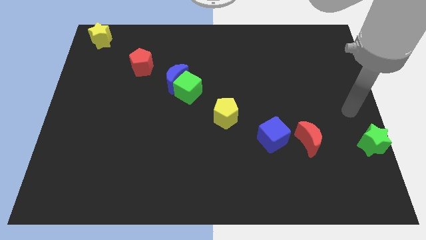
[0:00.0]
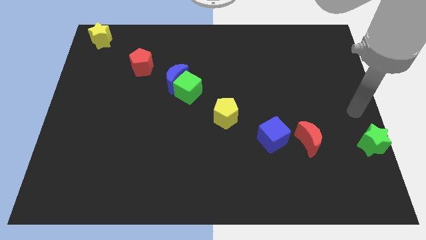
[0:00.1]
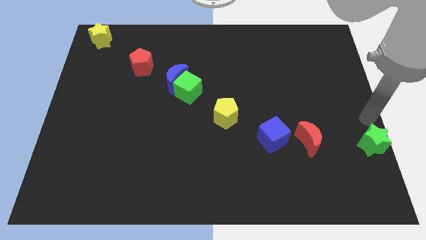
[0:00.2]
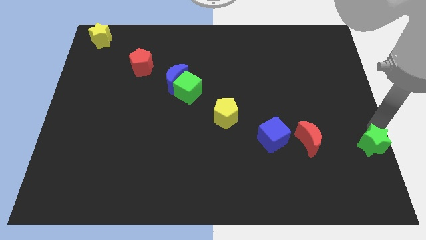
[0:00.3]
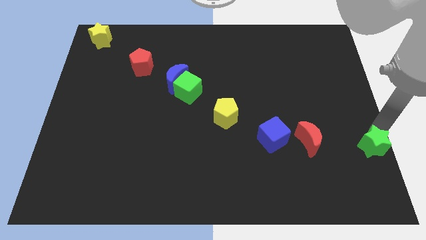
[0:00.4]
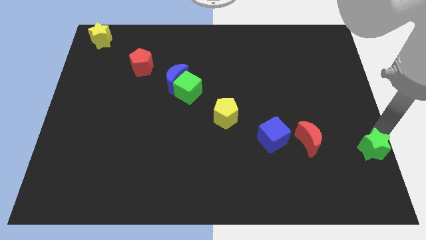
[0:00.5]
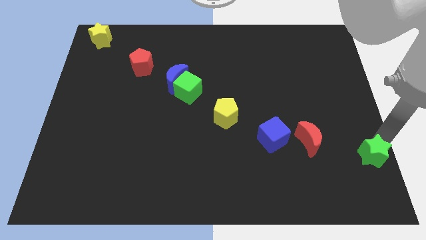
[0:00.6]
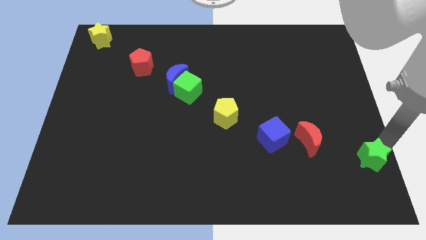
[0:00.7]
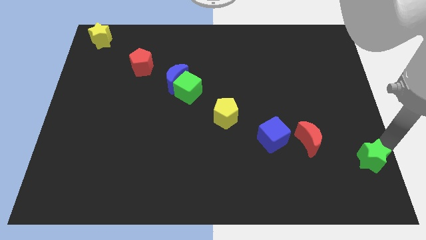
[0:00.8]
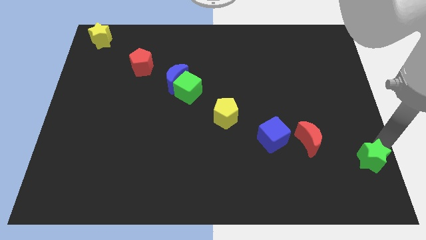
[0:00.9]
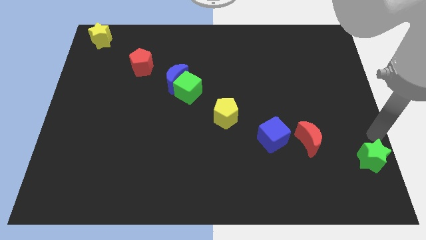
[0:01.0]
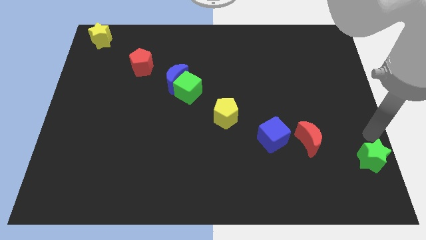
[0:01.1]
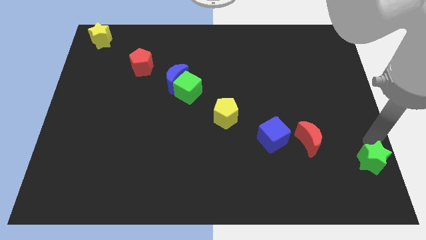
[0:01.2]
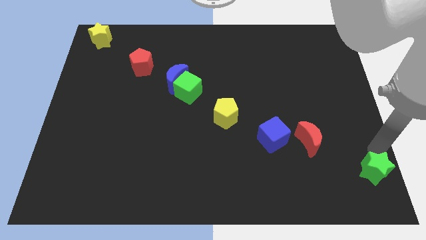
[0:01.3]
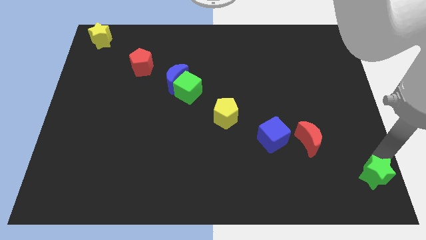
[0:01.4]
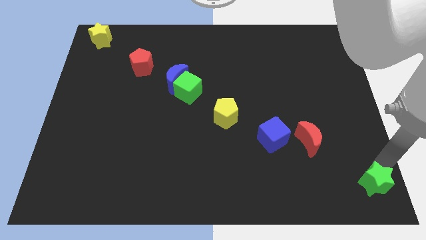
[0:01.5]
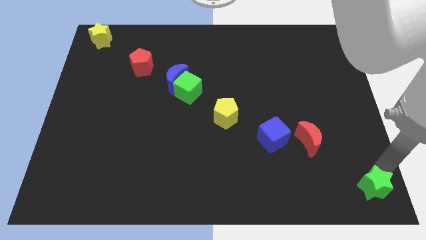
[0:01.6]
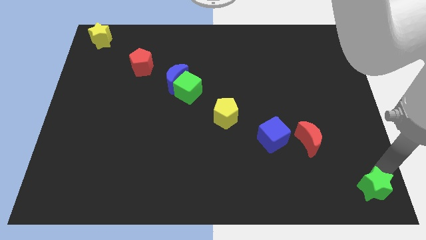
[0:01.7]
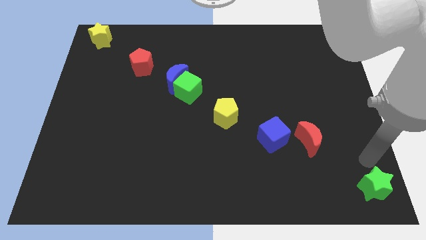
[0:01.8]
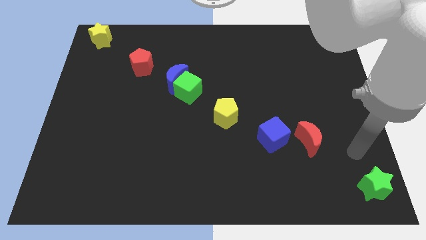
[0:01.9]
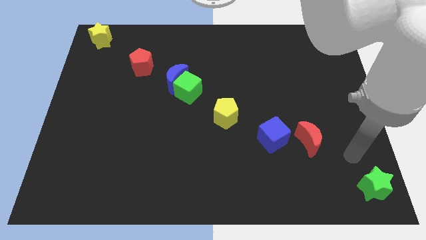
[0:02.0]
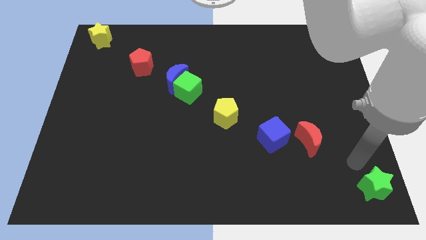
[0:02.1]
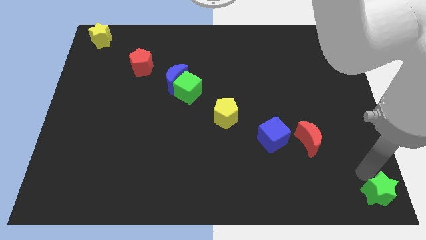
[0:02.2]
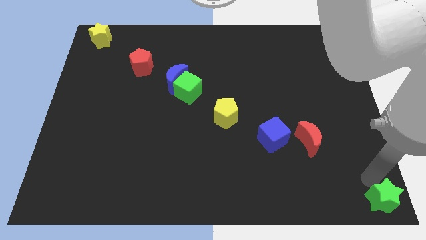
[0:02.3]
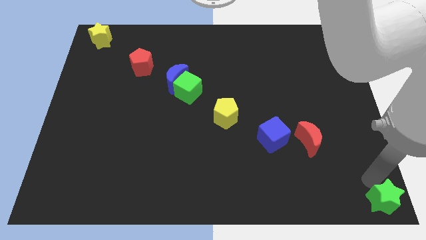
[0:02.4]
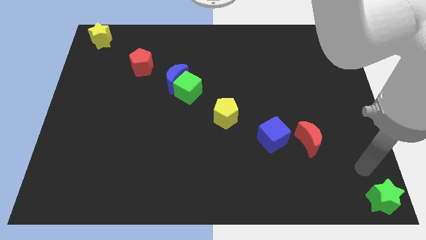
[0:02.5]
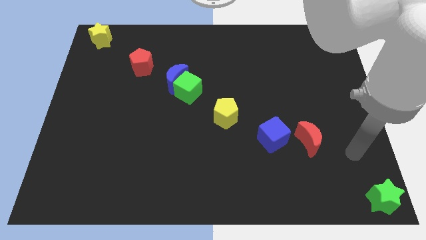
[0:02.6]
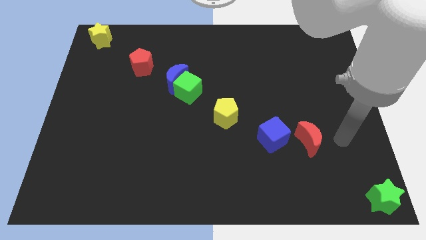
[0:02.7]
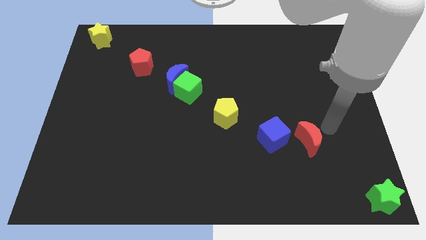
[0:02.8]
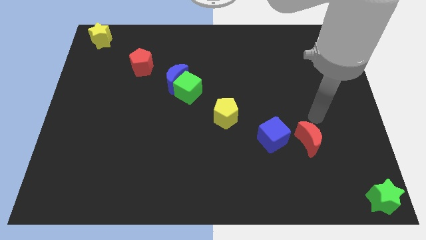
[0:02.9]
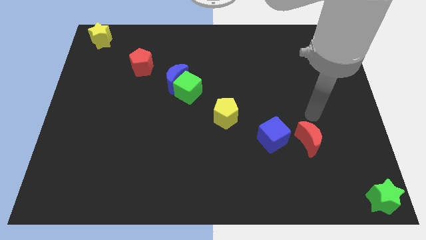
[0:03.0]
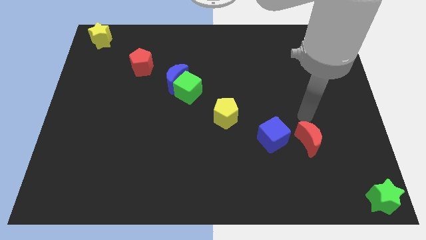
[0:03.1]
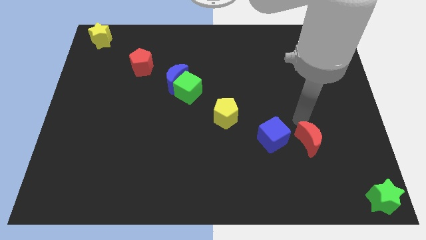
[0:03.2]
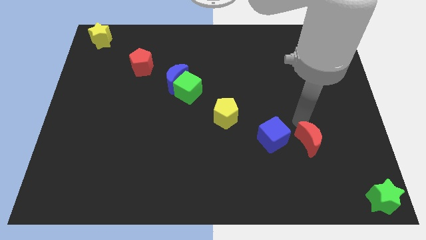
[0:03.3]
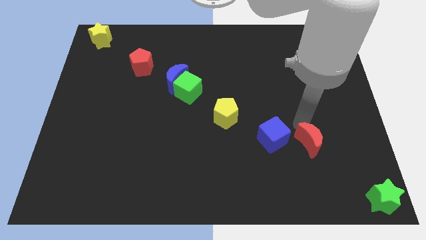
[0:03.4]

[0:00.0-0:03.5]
place the green star diagonally bottom right to the red moon

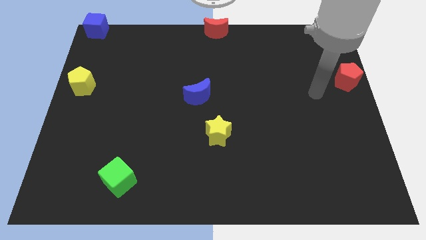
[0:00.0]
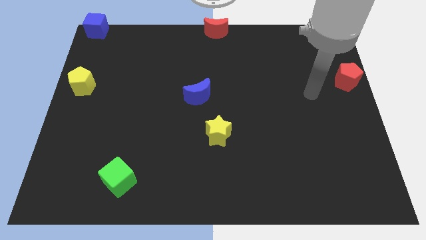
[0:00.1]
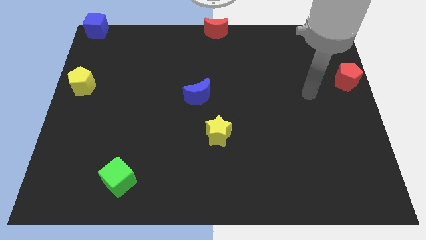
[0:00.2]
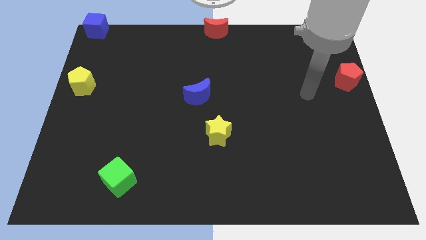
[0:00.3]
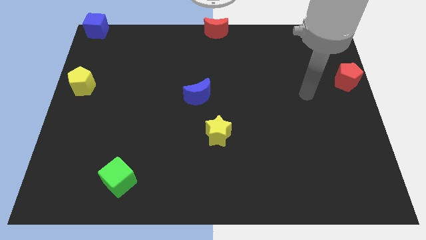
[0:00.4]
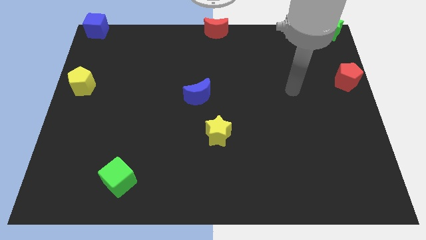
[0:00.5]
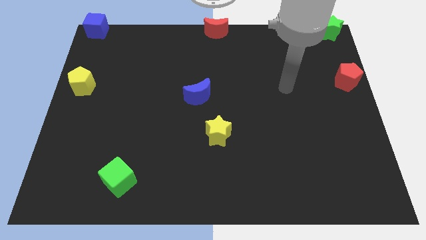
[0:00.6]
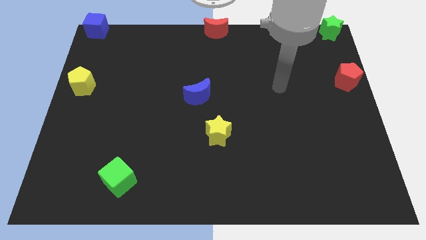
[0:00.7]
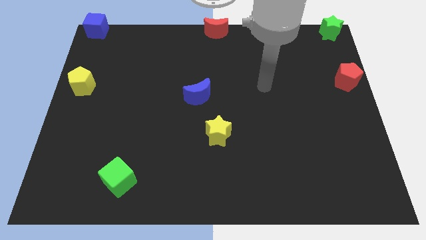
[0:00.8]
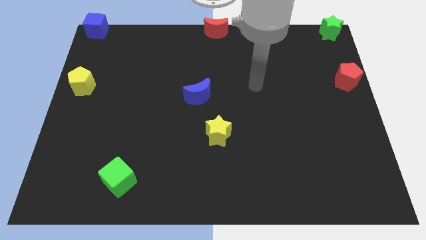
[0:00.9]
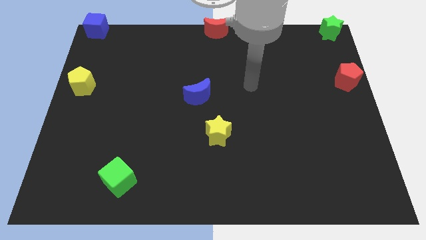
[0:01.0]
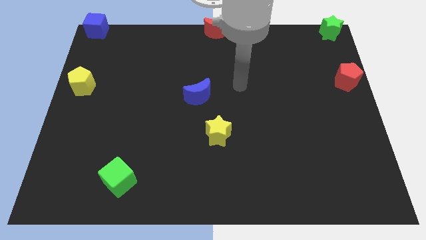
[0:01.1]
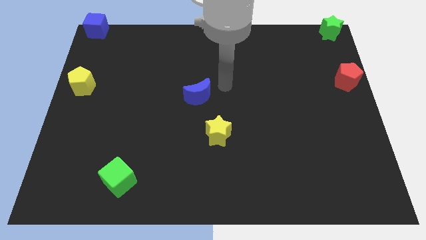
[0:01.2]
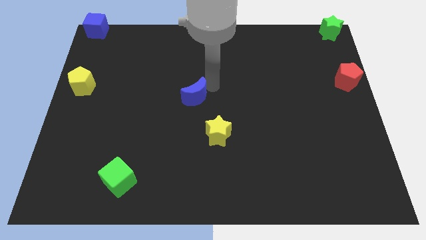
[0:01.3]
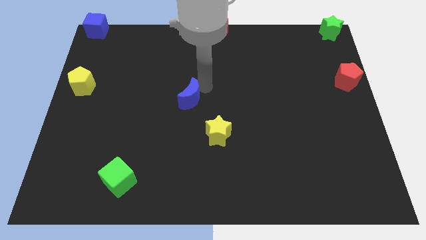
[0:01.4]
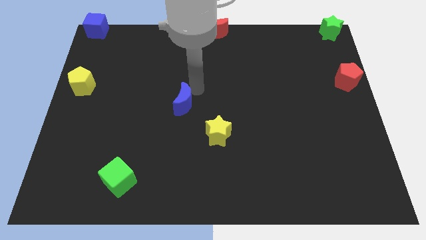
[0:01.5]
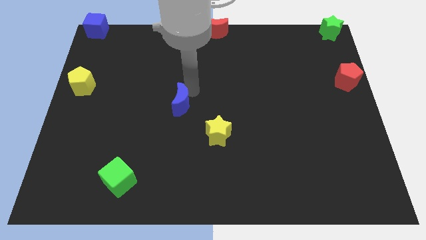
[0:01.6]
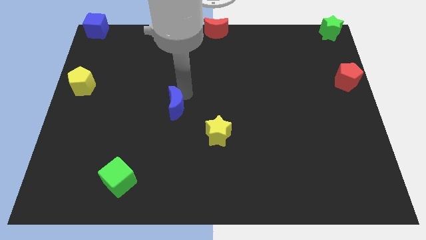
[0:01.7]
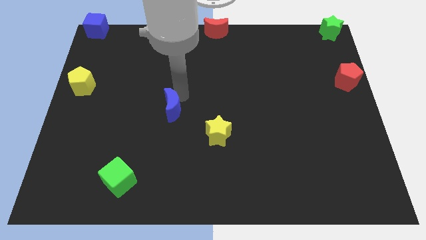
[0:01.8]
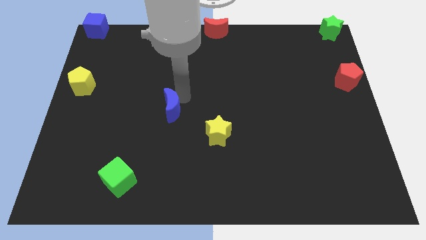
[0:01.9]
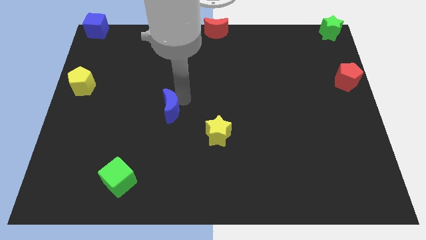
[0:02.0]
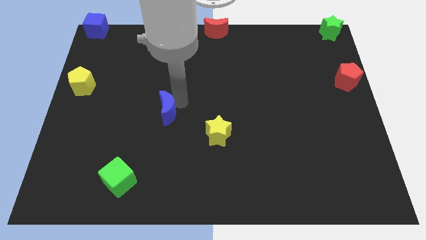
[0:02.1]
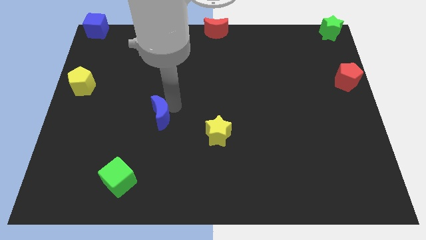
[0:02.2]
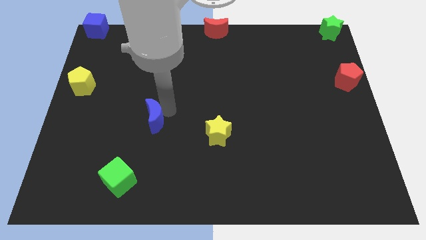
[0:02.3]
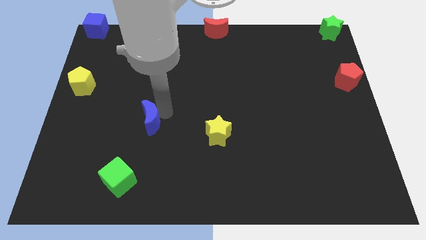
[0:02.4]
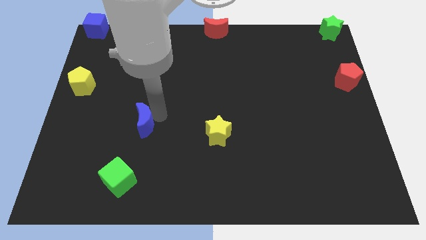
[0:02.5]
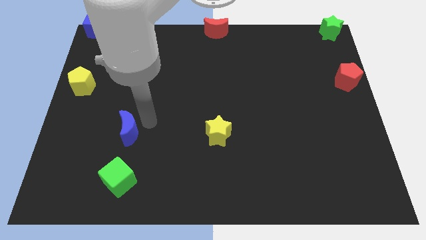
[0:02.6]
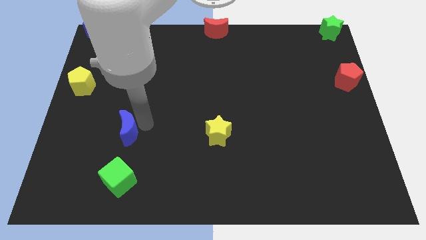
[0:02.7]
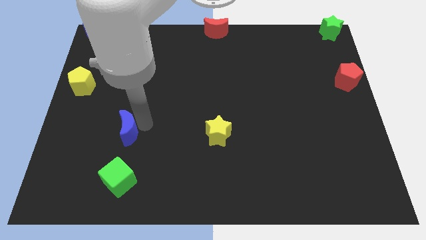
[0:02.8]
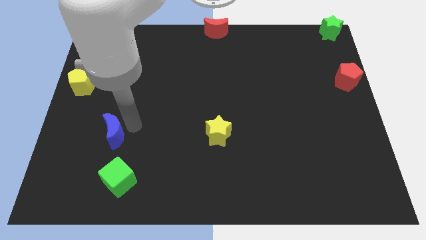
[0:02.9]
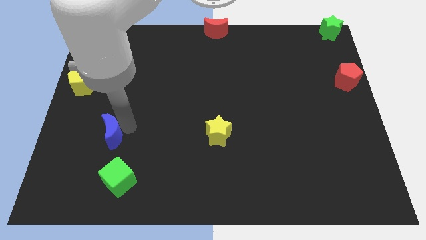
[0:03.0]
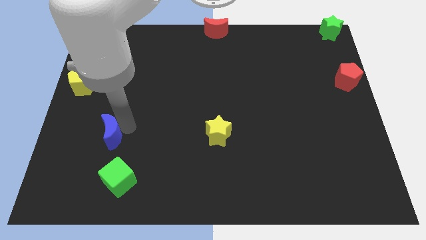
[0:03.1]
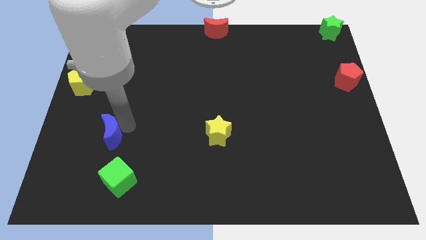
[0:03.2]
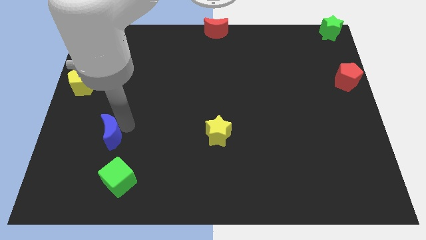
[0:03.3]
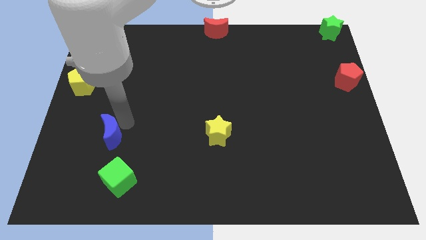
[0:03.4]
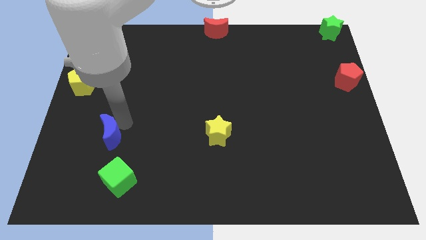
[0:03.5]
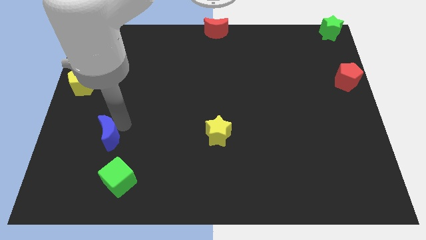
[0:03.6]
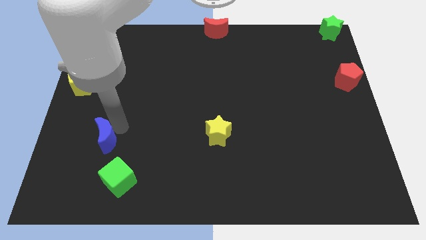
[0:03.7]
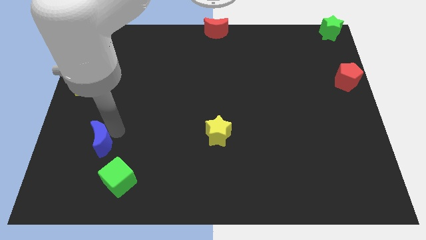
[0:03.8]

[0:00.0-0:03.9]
place the blue moon diagonally in between the yellow and green block

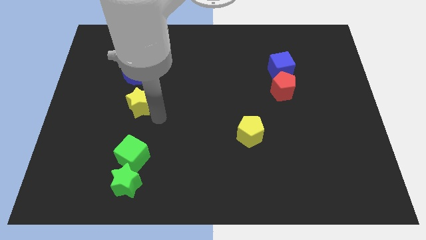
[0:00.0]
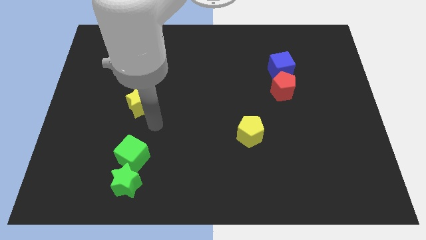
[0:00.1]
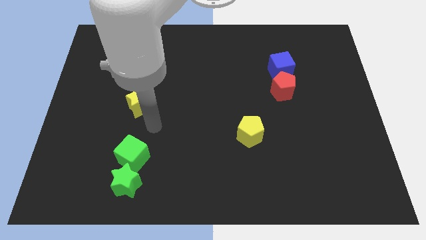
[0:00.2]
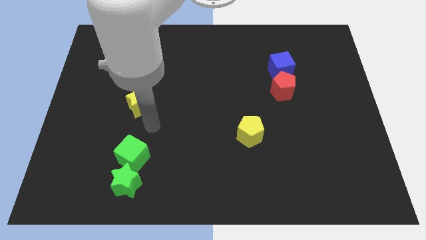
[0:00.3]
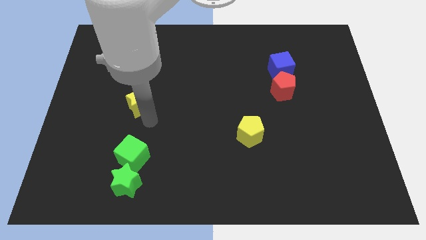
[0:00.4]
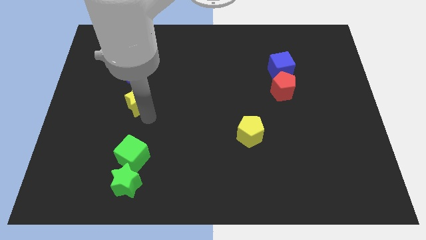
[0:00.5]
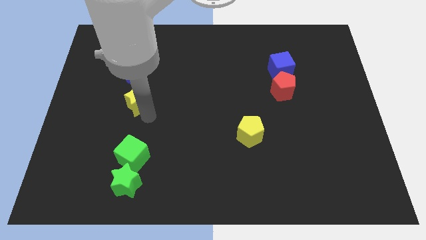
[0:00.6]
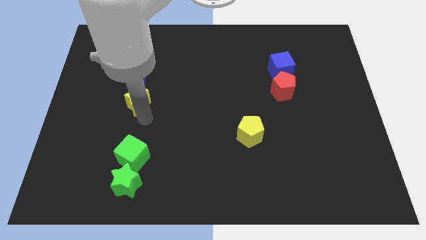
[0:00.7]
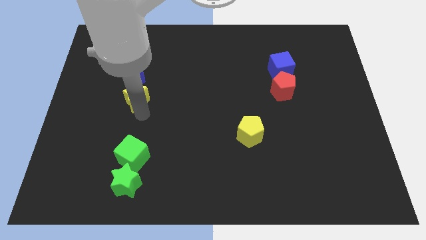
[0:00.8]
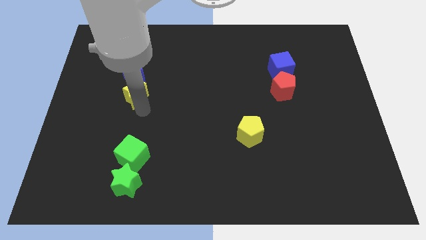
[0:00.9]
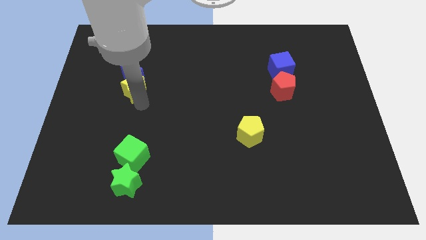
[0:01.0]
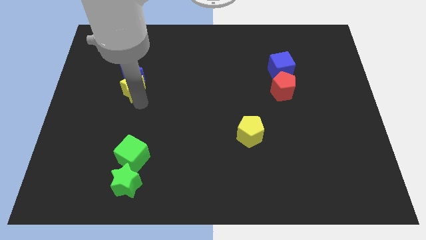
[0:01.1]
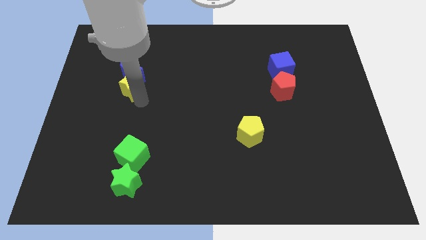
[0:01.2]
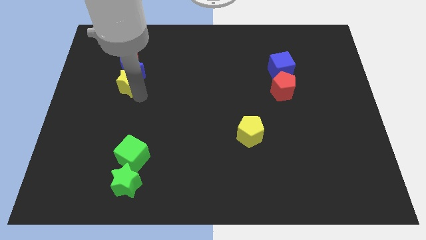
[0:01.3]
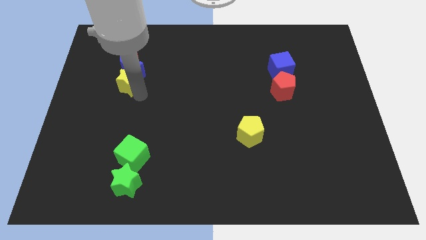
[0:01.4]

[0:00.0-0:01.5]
take the yellow star into the bottom of the blue moon

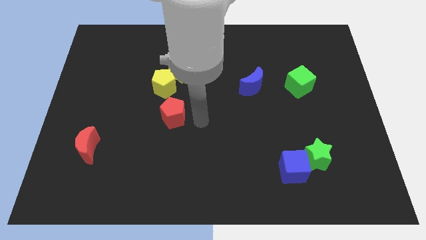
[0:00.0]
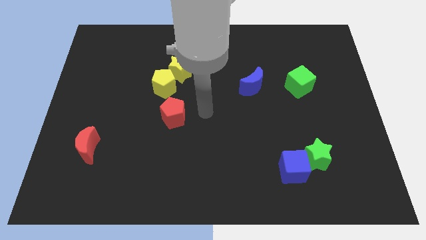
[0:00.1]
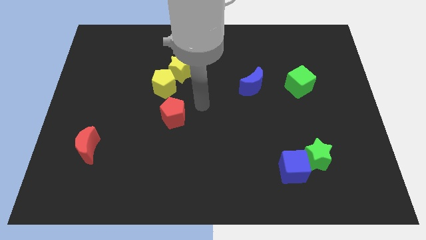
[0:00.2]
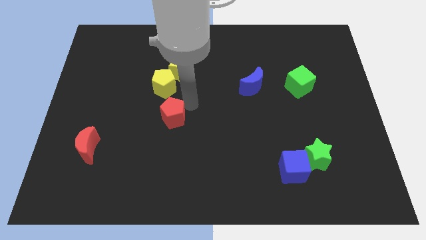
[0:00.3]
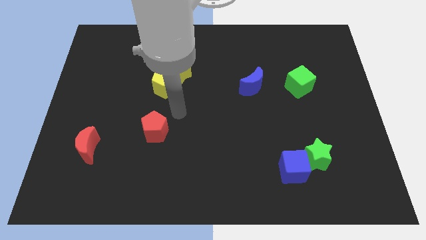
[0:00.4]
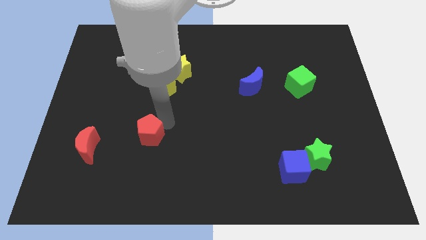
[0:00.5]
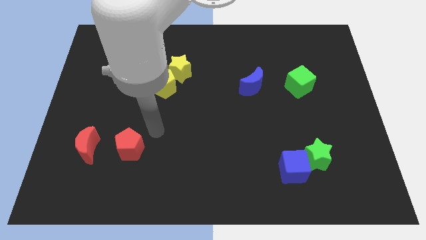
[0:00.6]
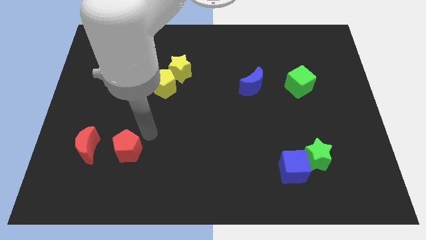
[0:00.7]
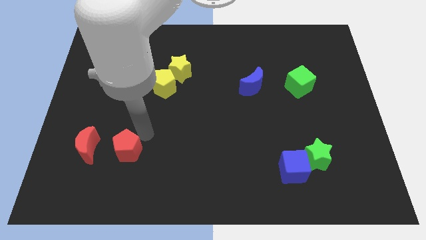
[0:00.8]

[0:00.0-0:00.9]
slide red pentagon to the right of red moon
